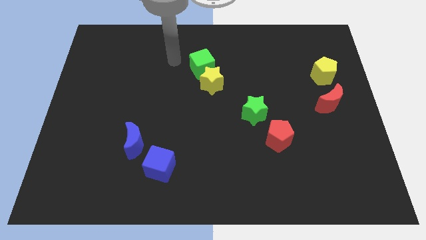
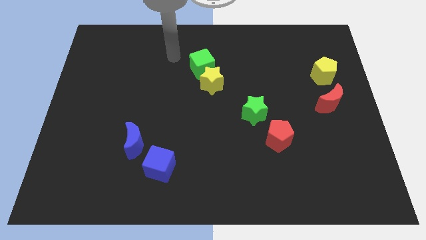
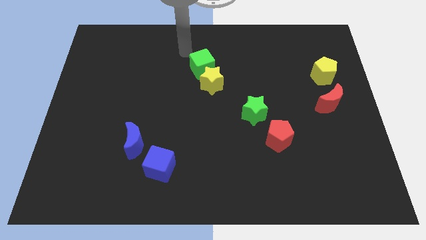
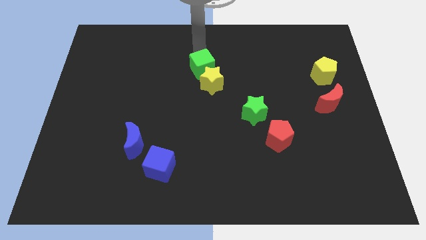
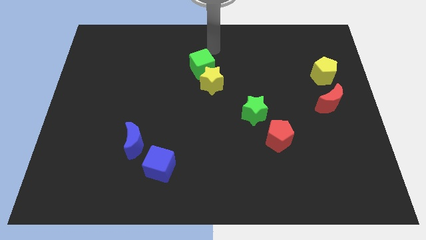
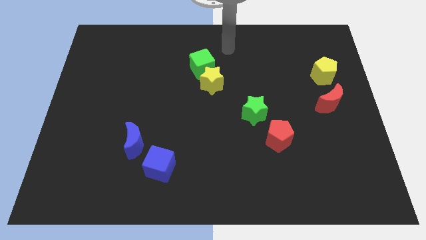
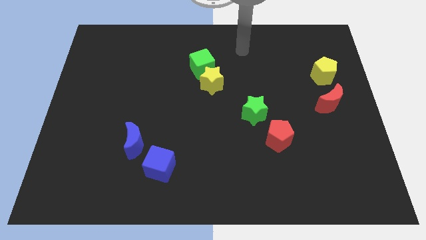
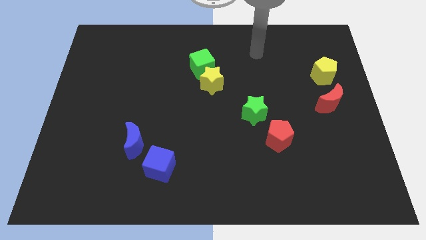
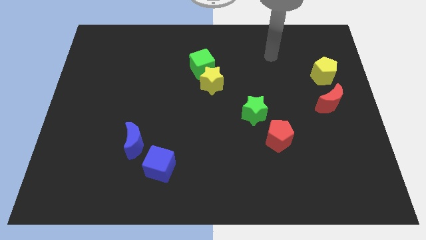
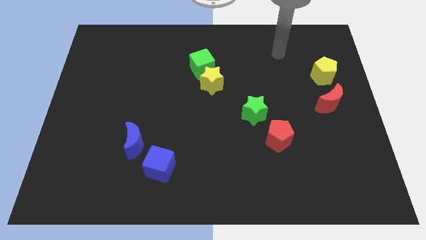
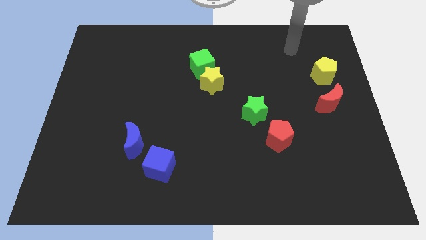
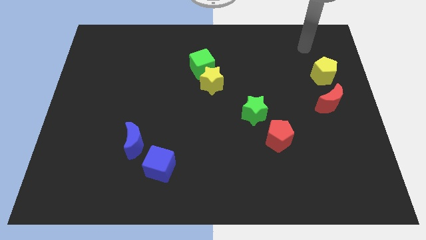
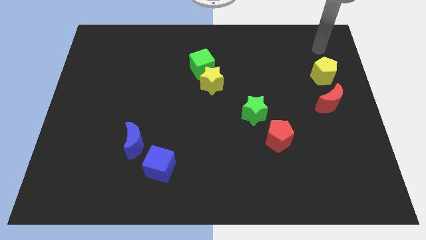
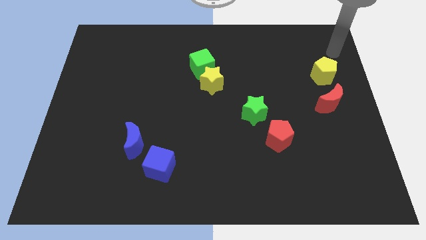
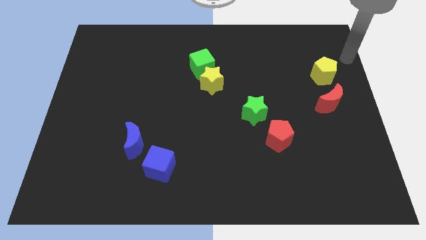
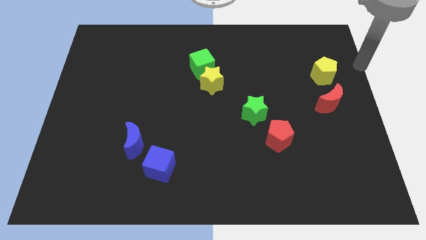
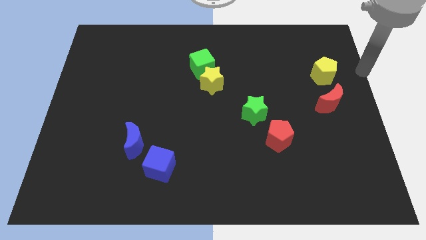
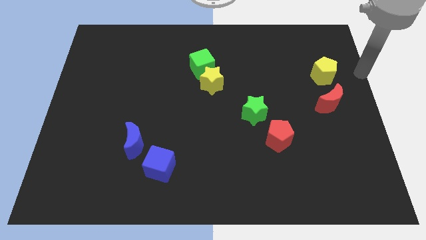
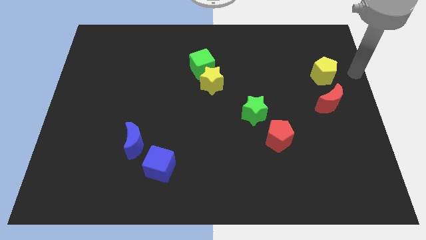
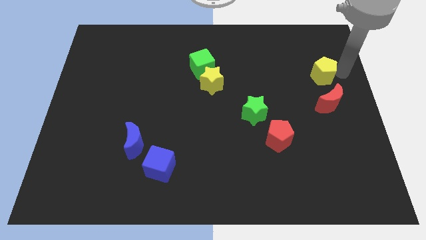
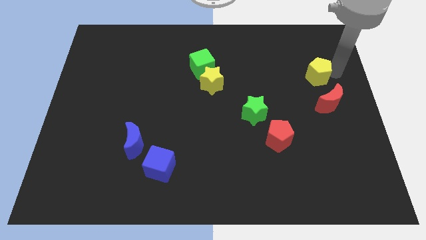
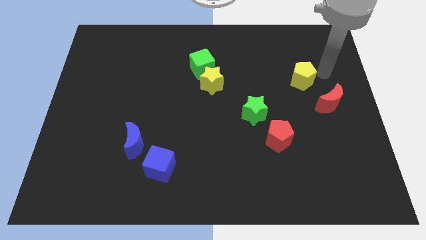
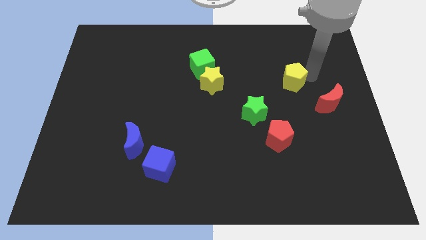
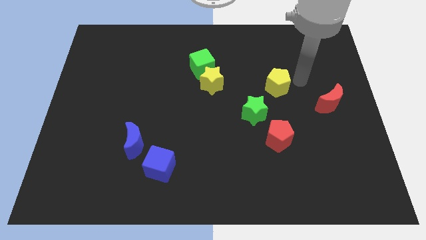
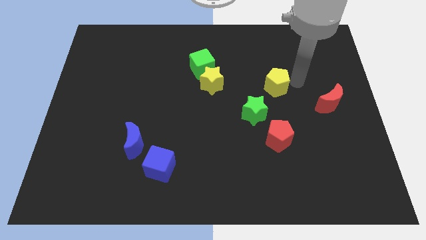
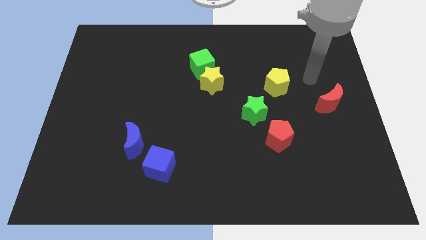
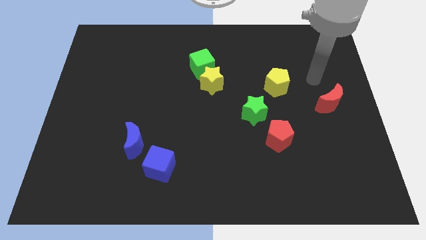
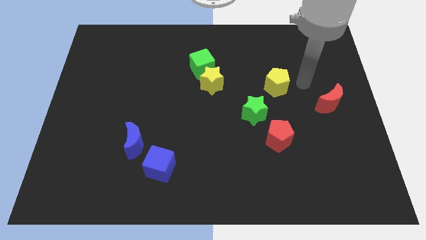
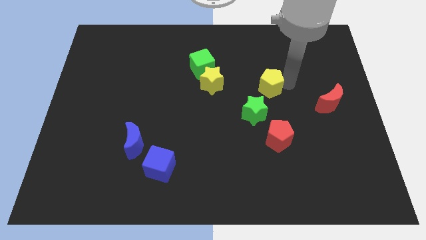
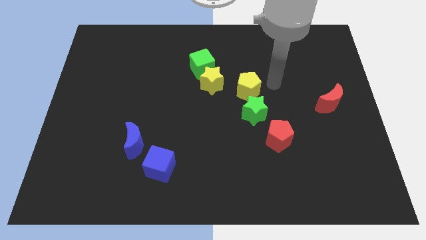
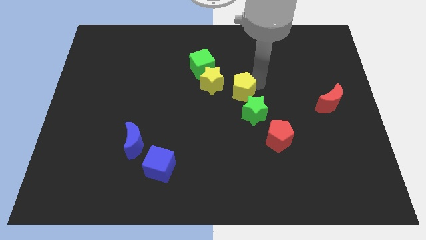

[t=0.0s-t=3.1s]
place yellow pentagon above the red pentagon

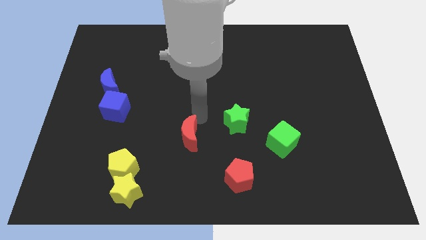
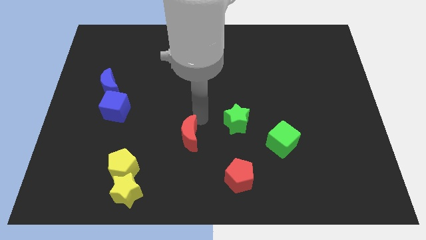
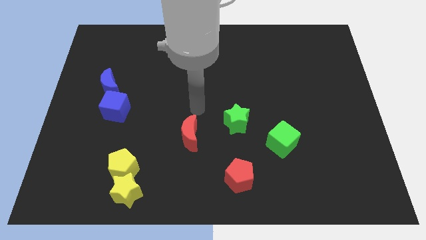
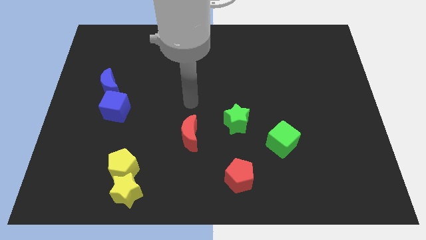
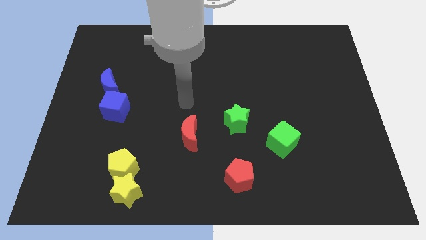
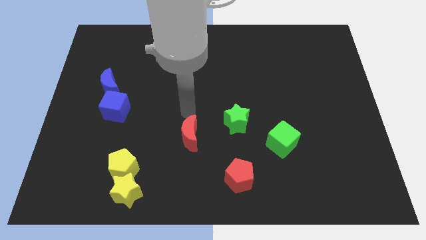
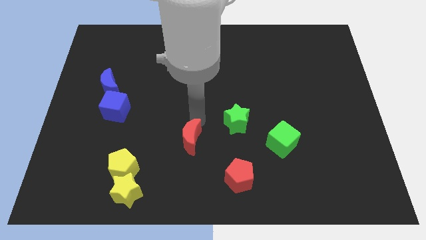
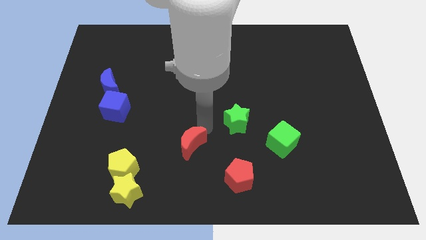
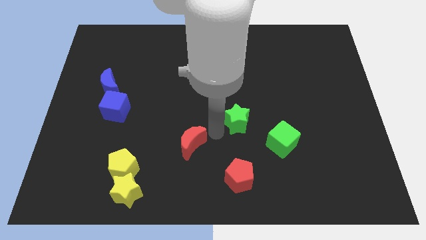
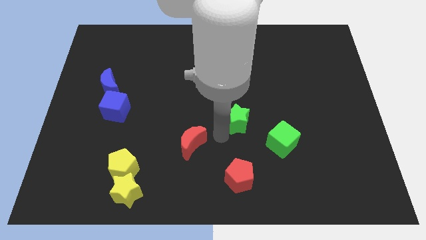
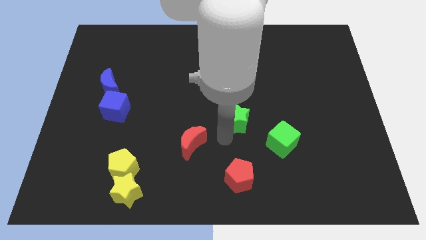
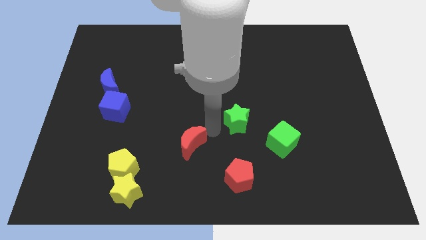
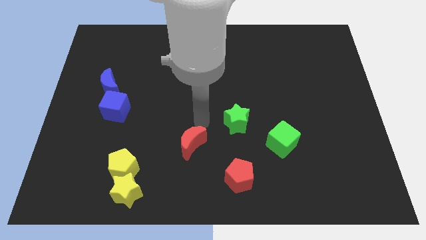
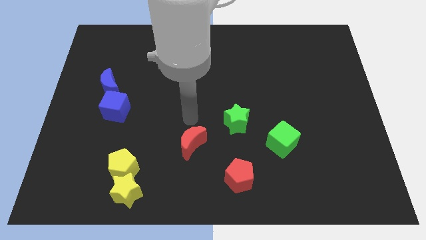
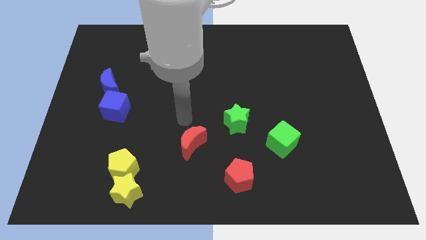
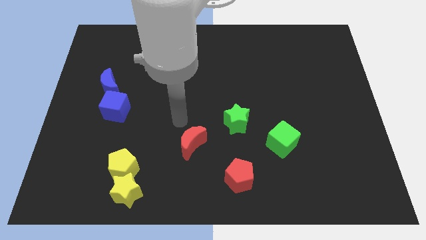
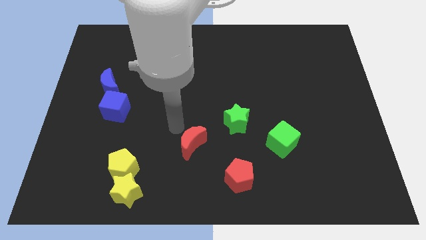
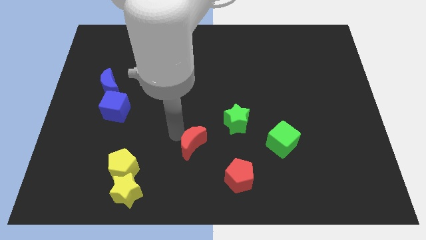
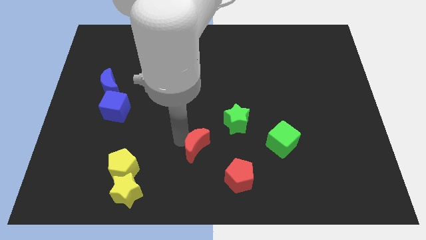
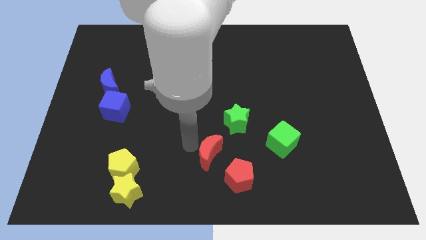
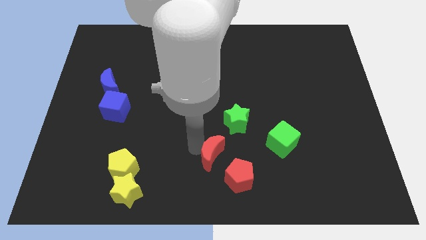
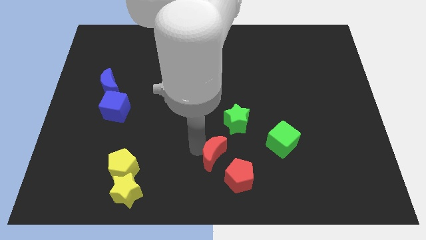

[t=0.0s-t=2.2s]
push the red crescent towards the red pentagon

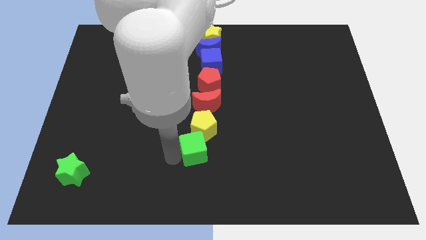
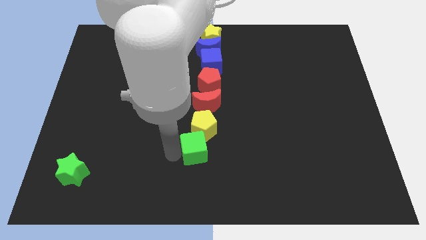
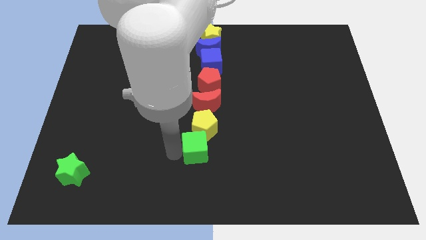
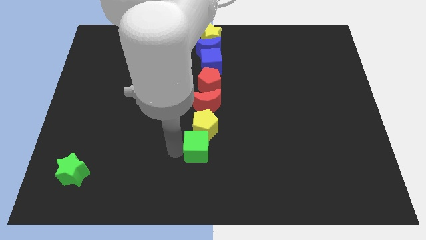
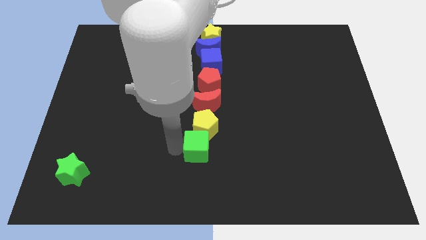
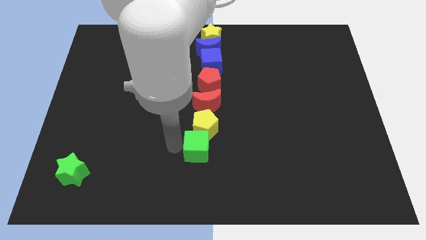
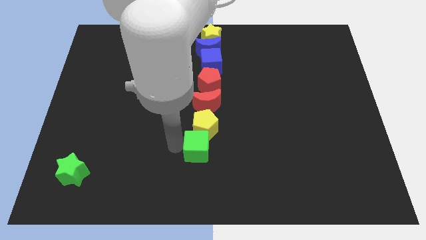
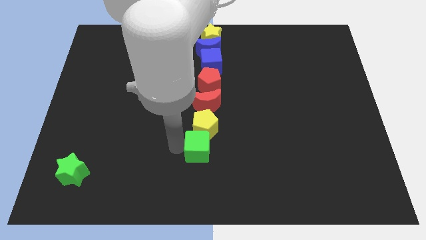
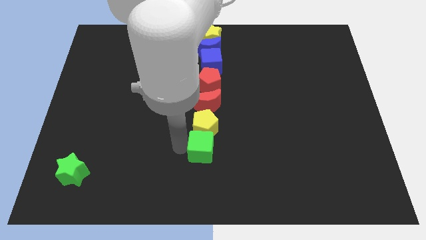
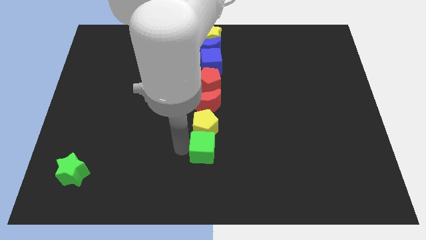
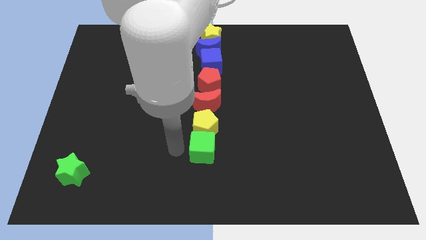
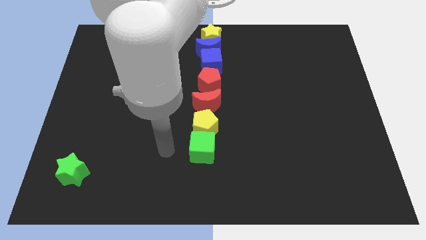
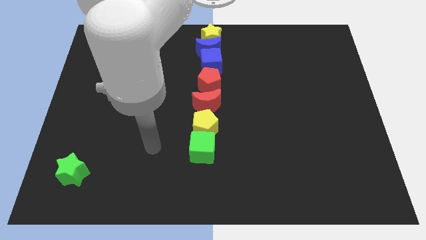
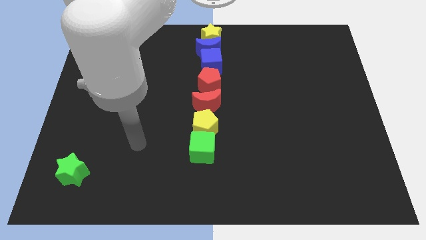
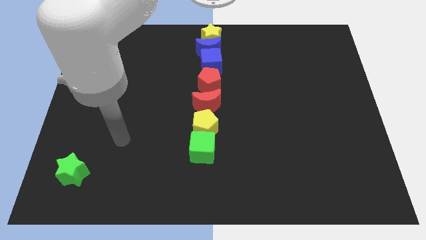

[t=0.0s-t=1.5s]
place the green cube below the yellow pentagon

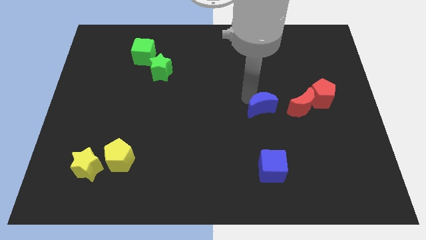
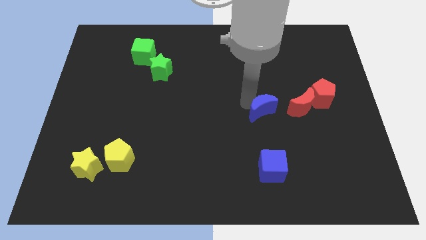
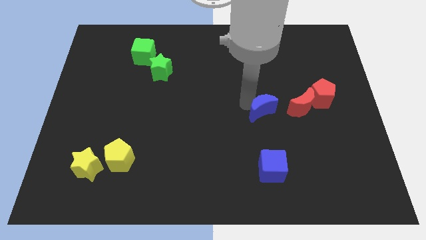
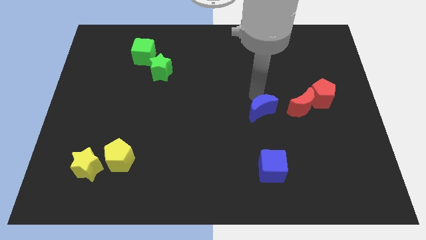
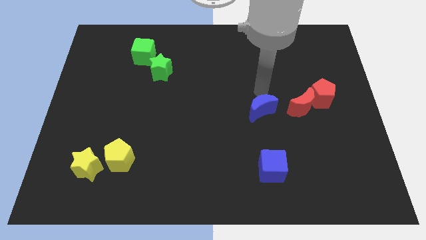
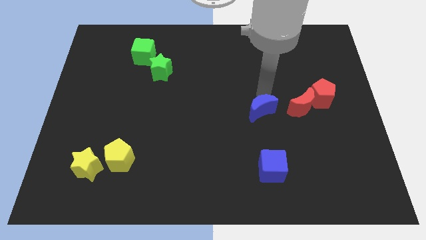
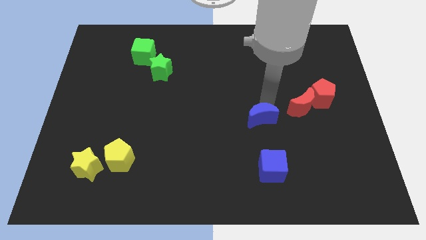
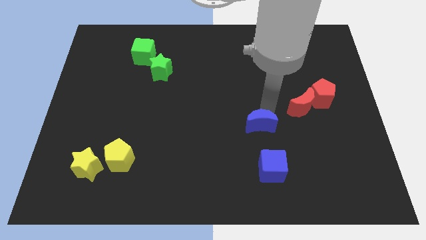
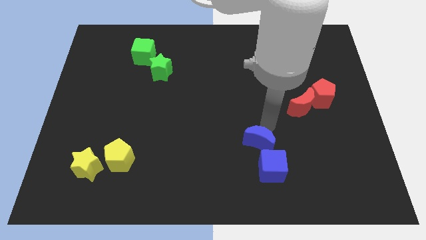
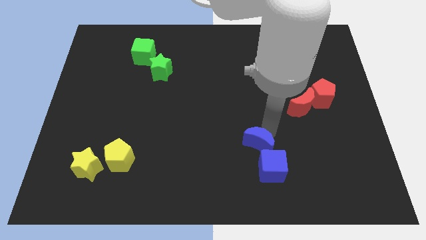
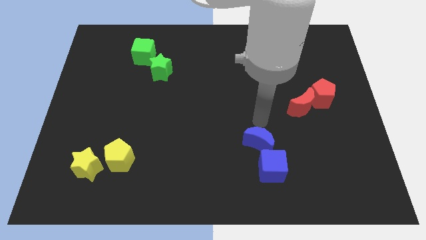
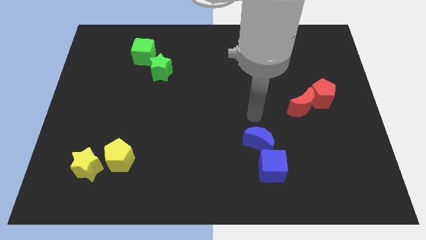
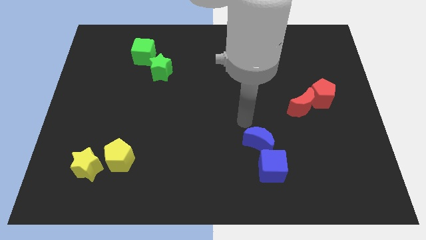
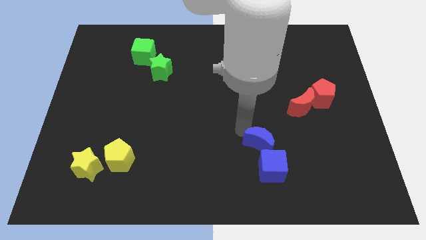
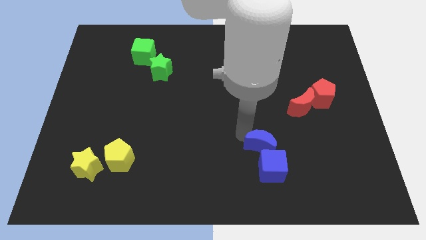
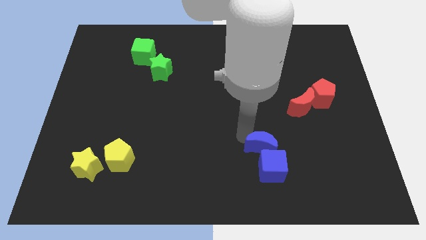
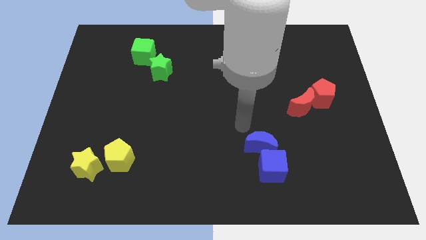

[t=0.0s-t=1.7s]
push the blue crescent above the blue cube

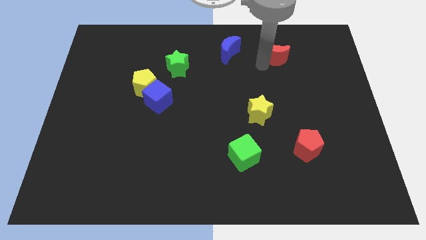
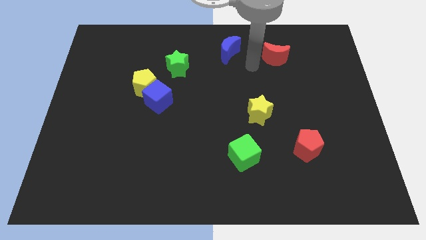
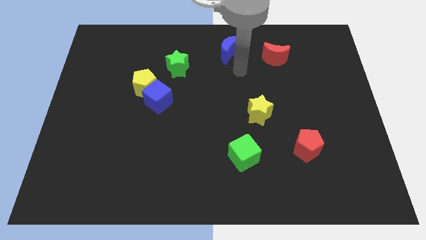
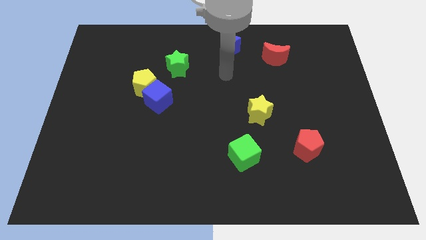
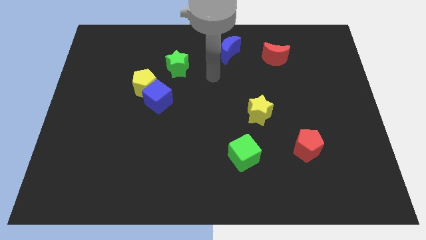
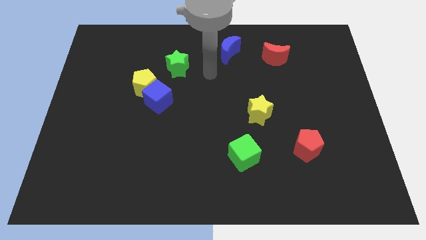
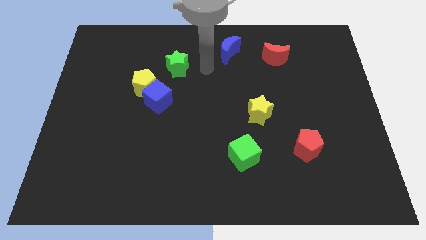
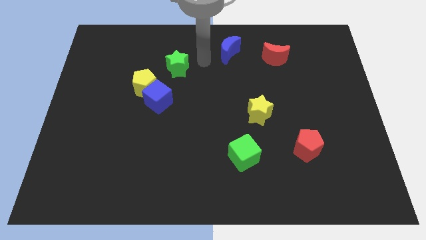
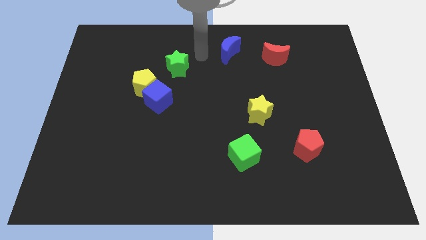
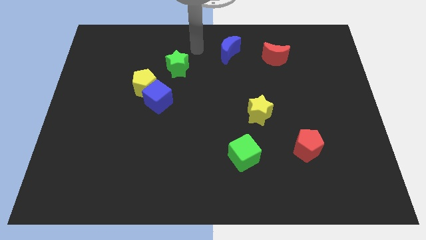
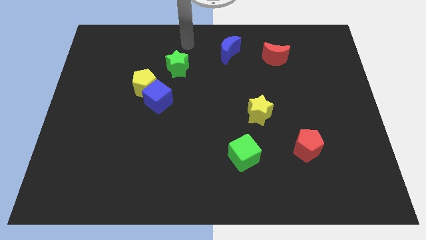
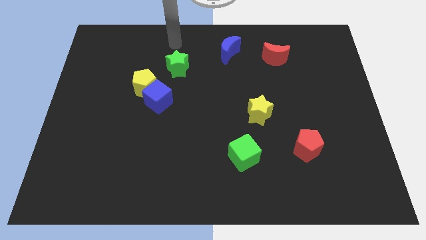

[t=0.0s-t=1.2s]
place your arm to the top of green star
